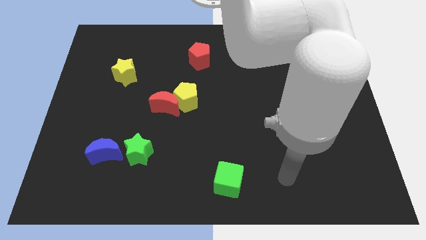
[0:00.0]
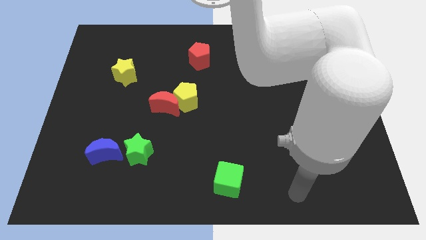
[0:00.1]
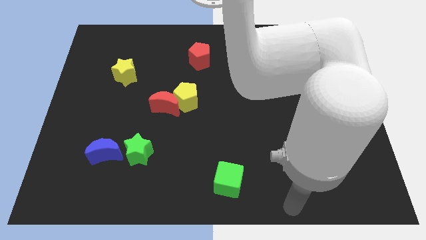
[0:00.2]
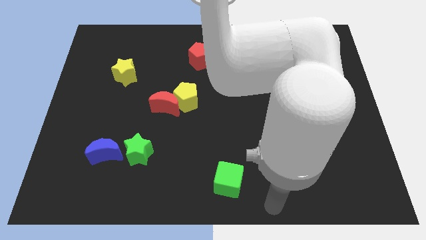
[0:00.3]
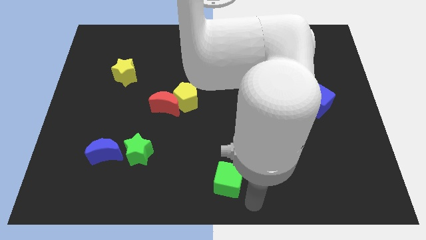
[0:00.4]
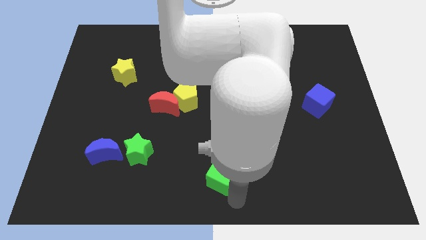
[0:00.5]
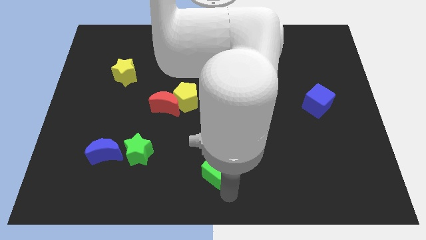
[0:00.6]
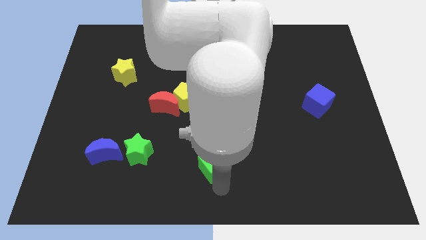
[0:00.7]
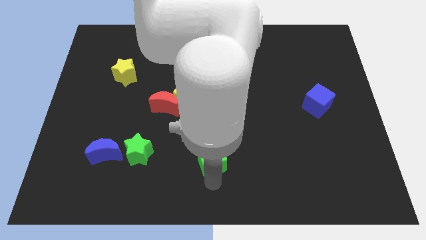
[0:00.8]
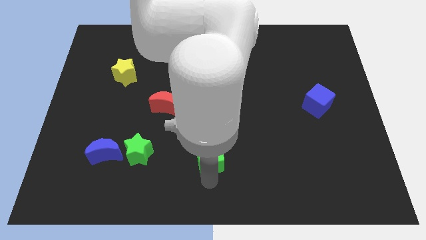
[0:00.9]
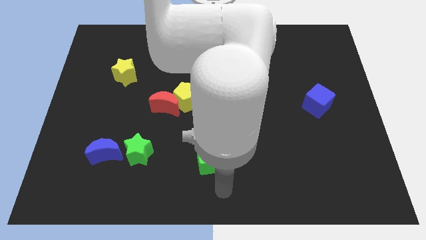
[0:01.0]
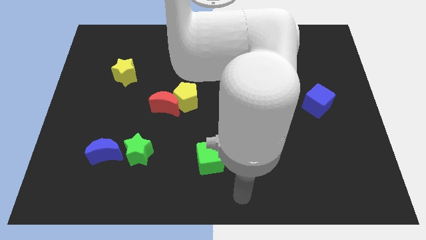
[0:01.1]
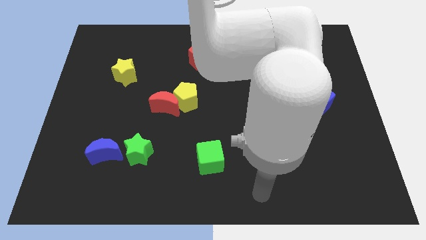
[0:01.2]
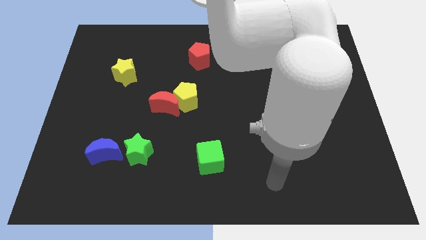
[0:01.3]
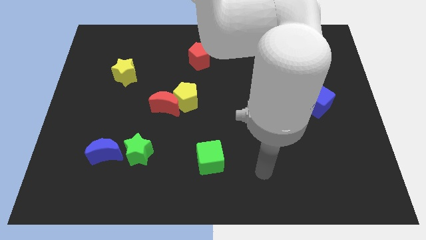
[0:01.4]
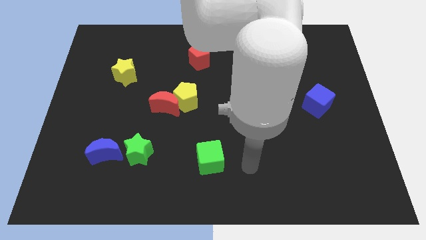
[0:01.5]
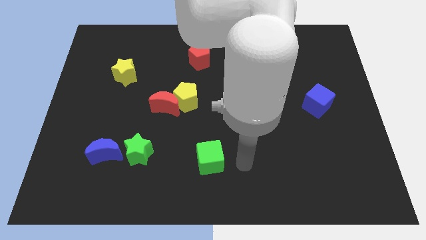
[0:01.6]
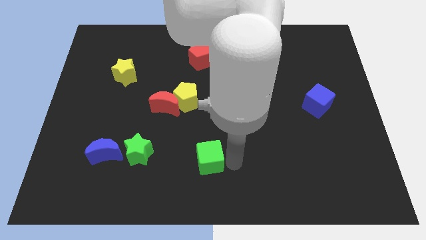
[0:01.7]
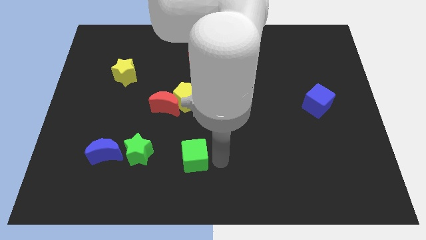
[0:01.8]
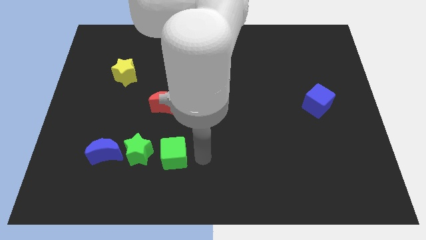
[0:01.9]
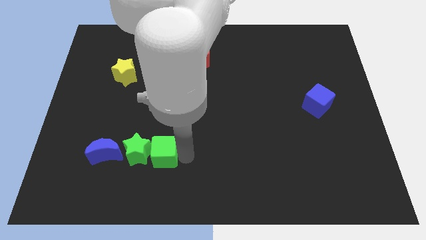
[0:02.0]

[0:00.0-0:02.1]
place the green cube to the right of the green star

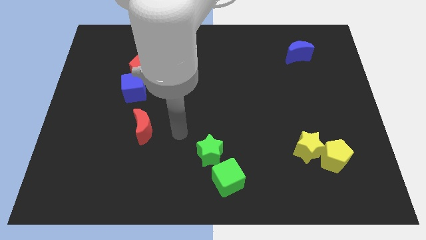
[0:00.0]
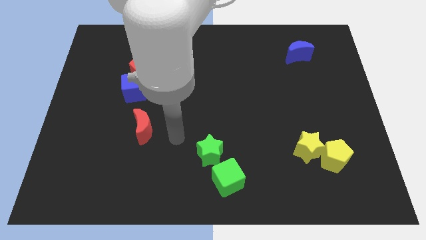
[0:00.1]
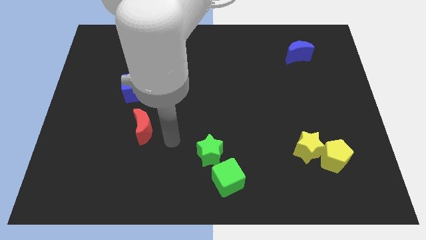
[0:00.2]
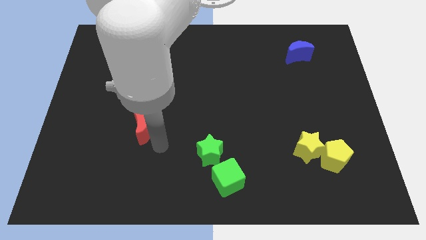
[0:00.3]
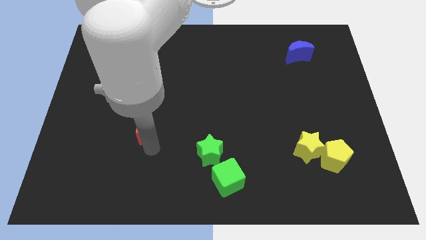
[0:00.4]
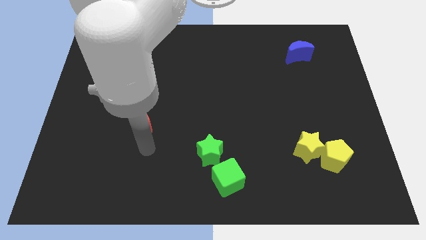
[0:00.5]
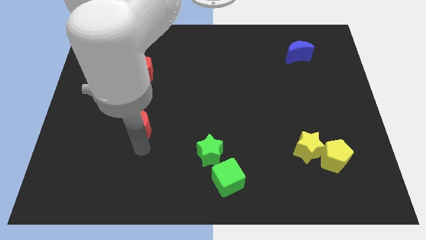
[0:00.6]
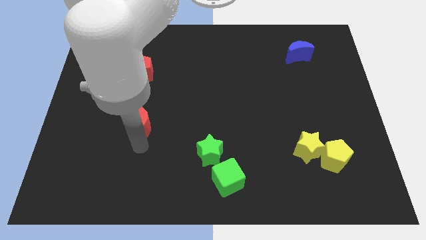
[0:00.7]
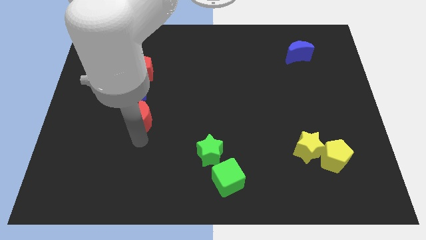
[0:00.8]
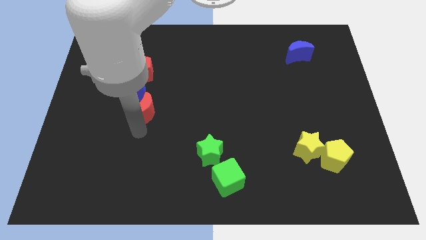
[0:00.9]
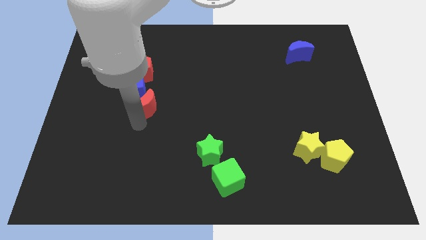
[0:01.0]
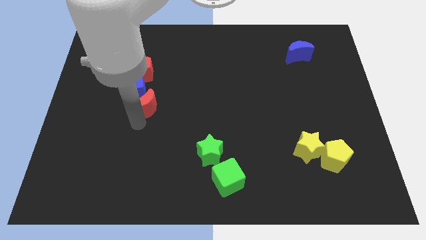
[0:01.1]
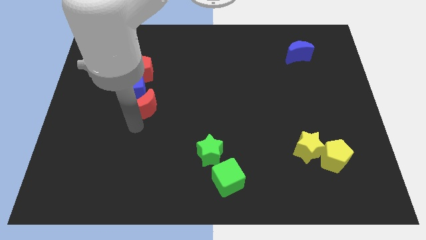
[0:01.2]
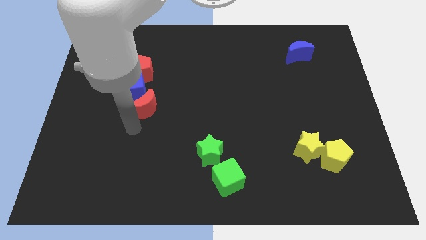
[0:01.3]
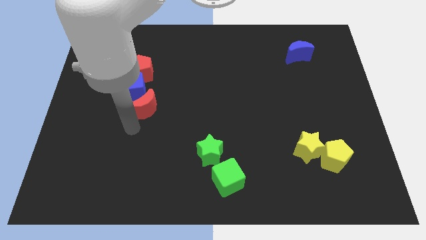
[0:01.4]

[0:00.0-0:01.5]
move the red moon to the bottom right of the blue cube

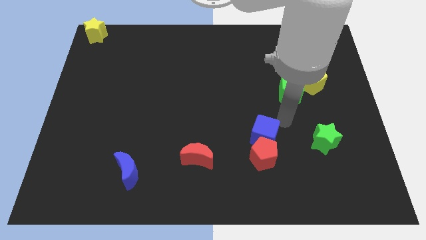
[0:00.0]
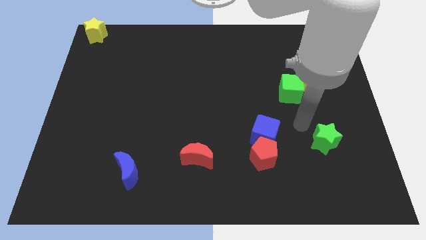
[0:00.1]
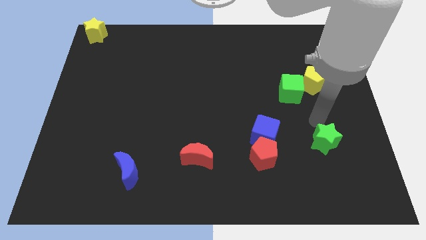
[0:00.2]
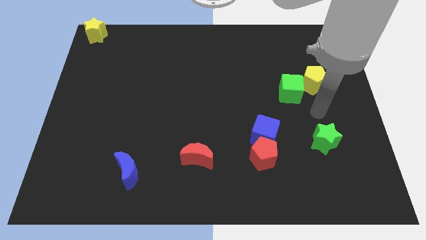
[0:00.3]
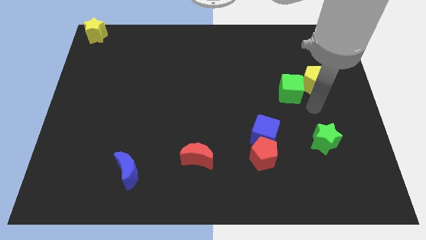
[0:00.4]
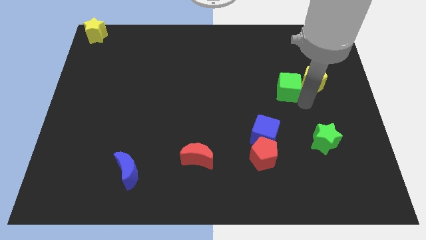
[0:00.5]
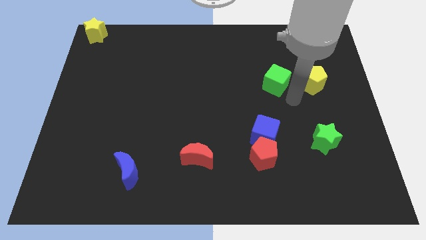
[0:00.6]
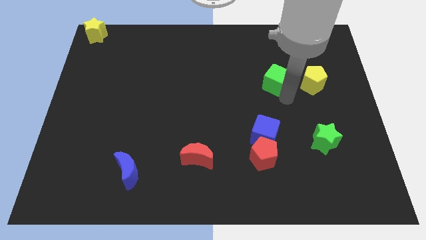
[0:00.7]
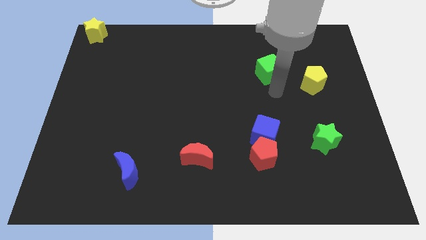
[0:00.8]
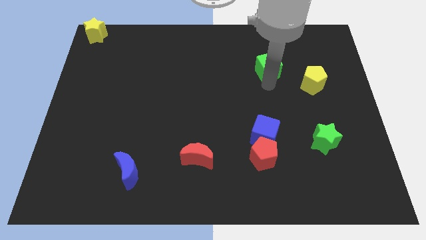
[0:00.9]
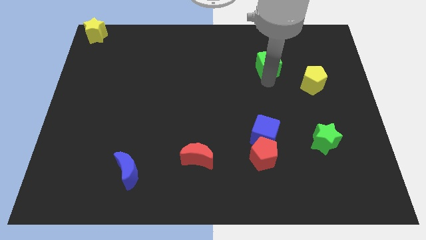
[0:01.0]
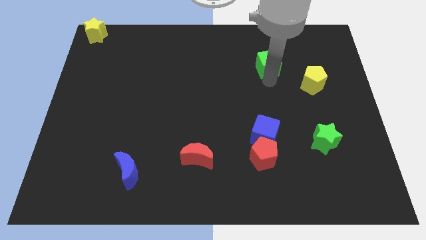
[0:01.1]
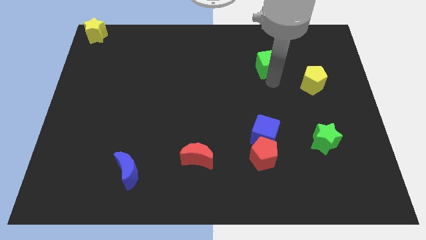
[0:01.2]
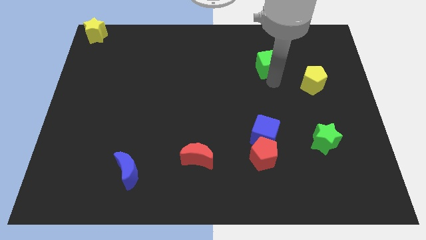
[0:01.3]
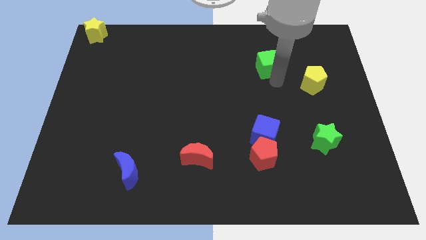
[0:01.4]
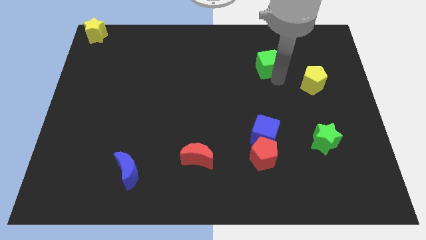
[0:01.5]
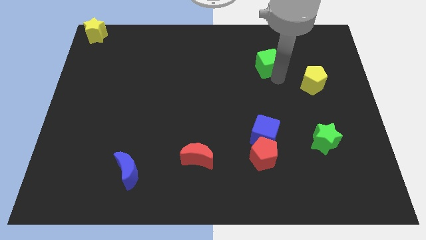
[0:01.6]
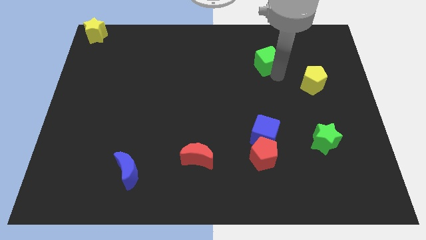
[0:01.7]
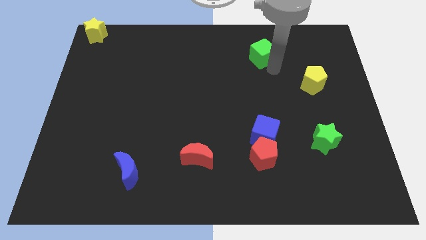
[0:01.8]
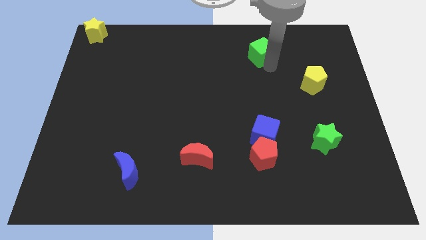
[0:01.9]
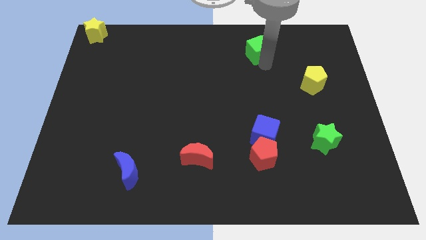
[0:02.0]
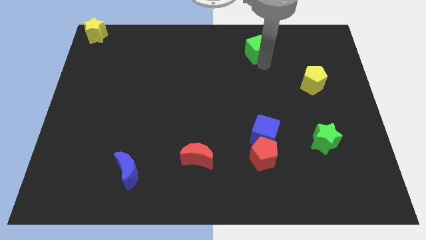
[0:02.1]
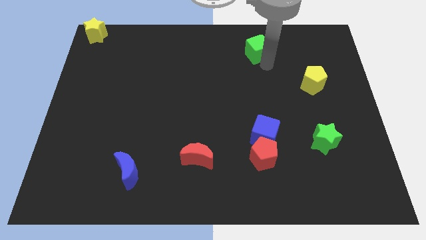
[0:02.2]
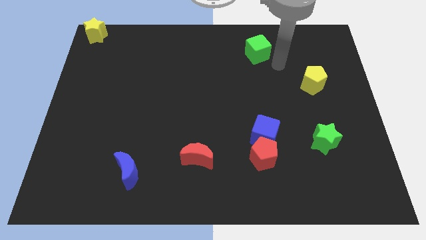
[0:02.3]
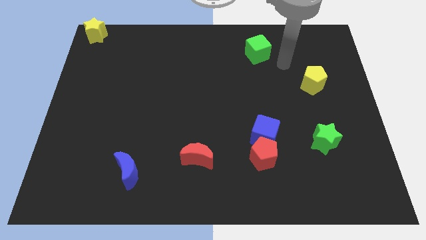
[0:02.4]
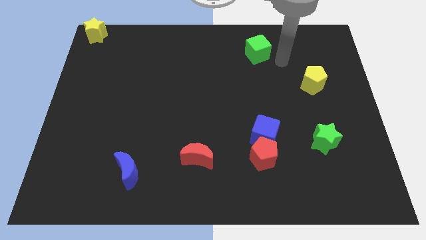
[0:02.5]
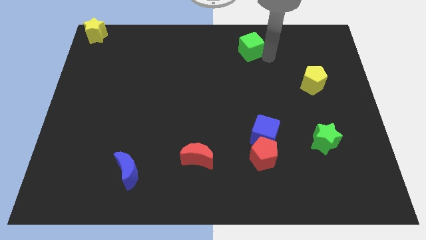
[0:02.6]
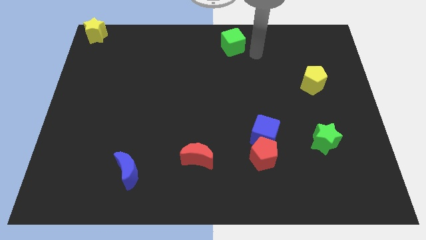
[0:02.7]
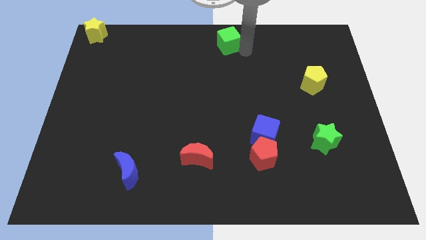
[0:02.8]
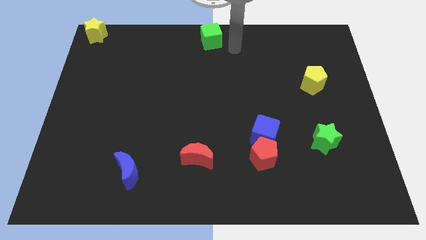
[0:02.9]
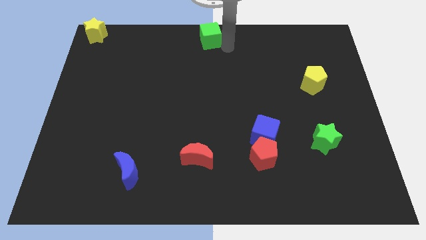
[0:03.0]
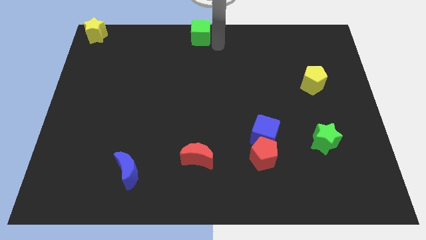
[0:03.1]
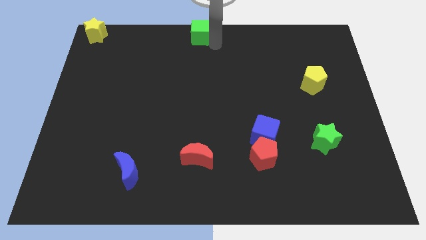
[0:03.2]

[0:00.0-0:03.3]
push the green cube above the red crescent

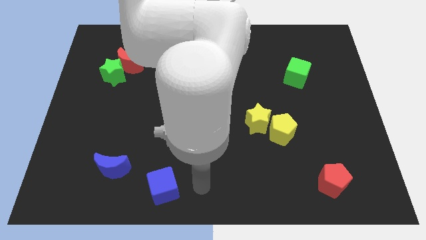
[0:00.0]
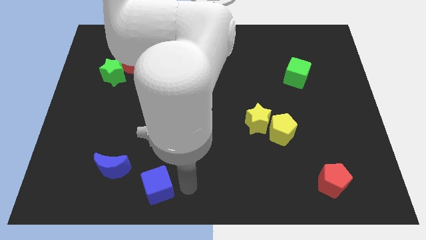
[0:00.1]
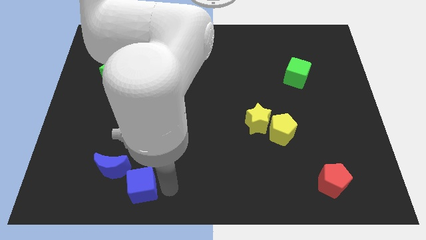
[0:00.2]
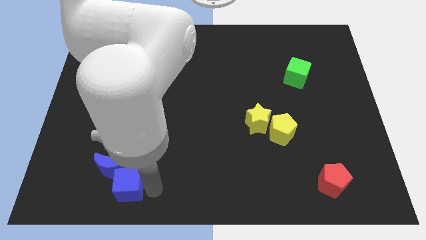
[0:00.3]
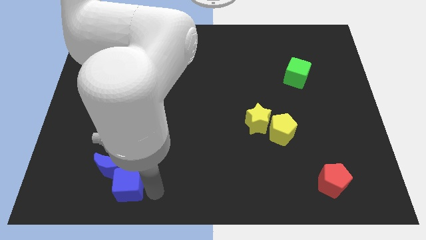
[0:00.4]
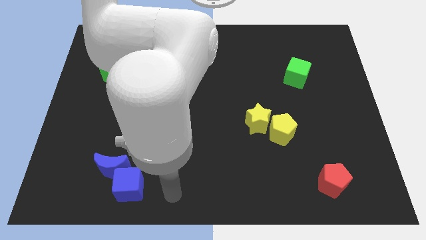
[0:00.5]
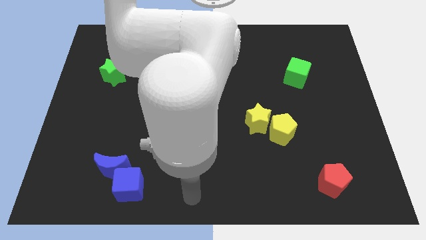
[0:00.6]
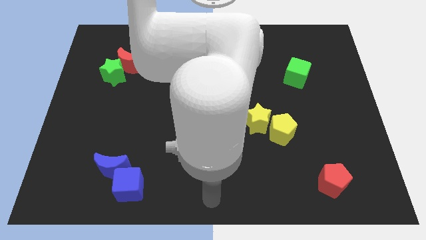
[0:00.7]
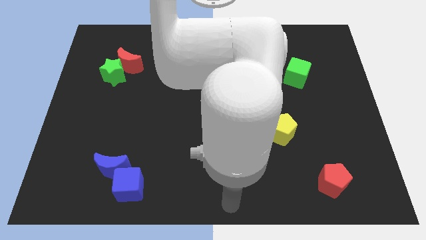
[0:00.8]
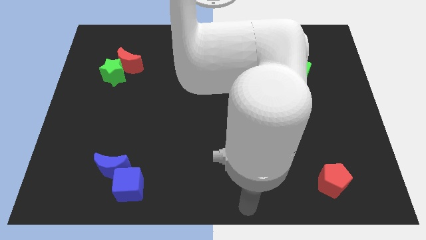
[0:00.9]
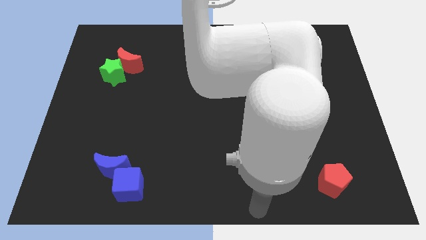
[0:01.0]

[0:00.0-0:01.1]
place the blue cube at the bottom right side of blue moon

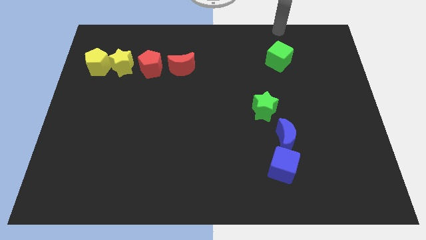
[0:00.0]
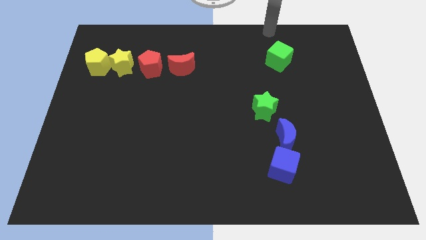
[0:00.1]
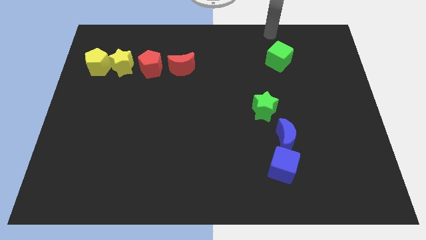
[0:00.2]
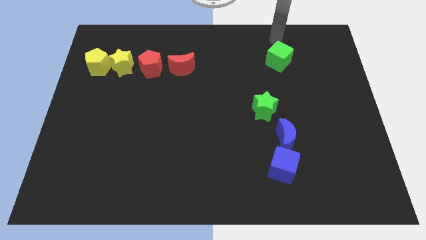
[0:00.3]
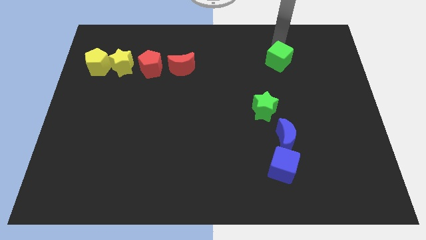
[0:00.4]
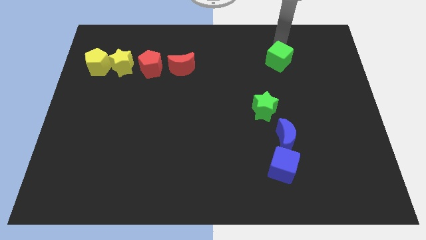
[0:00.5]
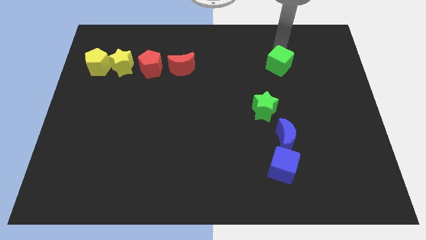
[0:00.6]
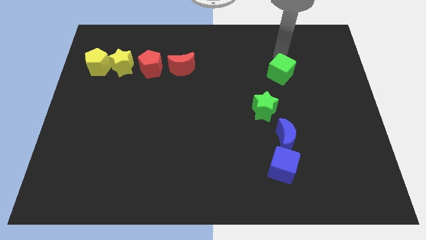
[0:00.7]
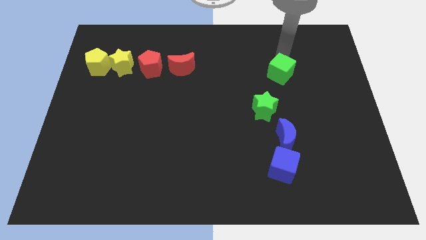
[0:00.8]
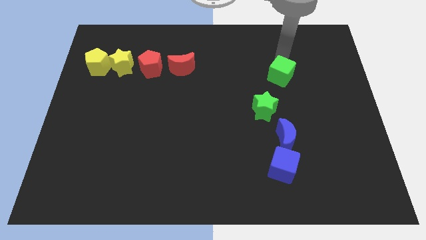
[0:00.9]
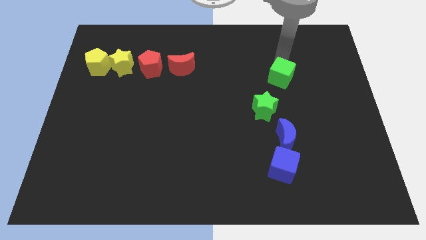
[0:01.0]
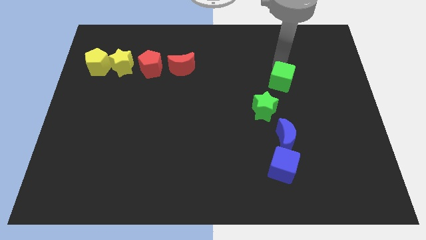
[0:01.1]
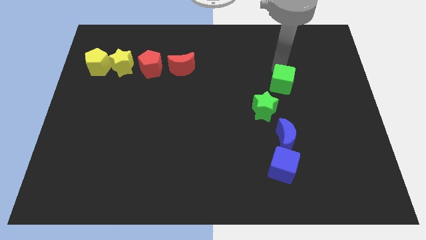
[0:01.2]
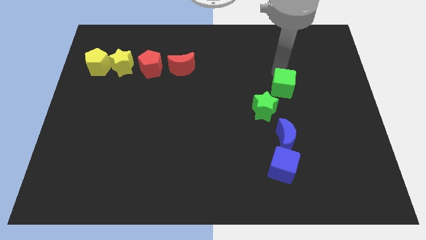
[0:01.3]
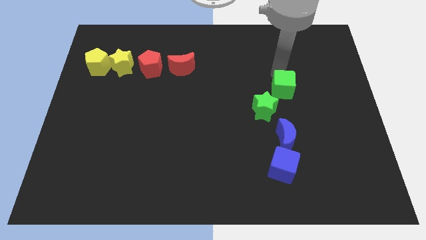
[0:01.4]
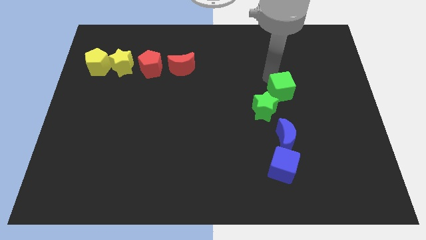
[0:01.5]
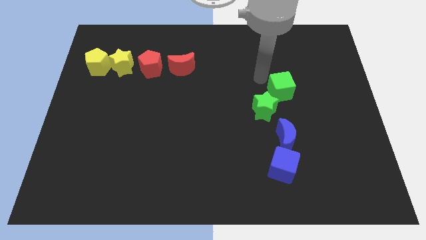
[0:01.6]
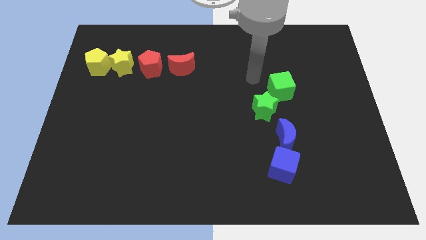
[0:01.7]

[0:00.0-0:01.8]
push the green cube downwards to the top right of green star
